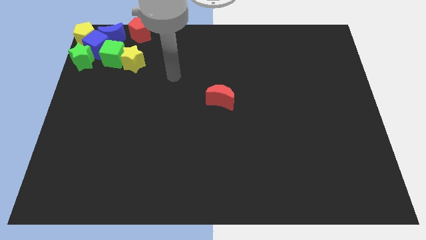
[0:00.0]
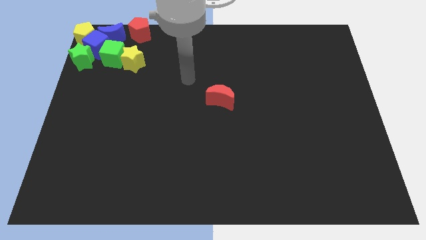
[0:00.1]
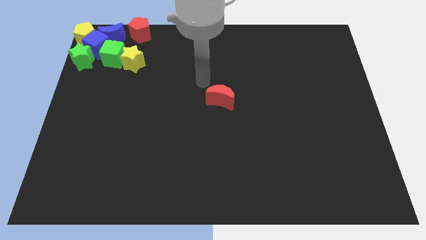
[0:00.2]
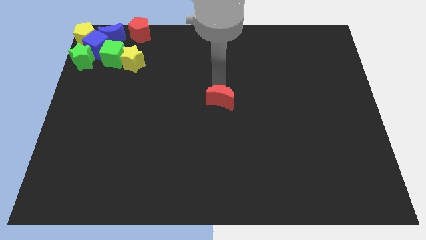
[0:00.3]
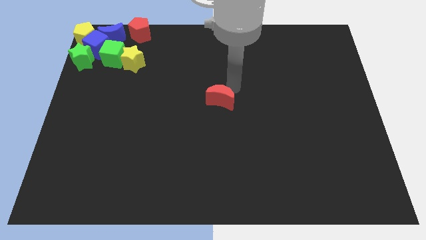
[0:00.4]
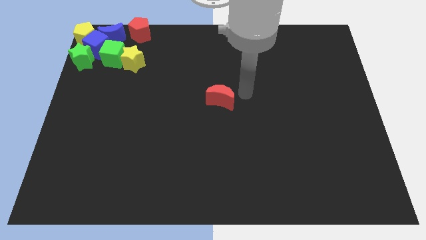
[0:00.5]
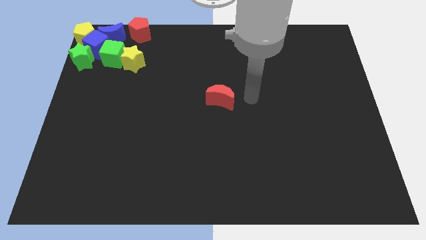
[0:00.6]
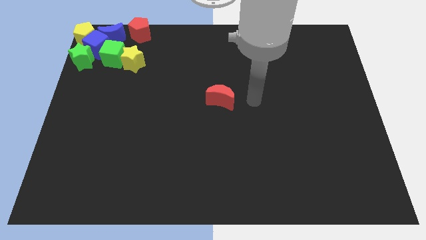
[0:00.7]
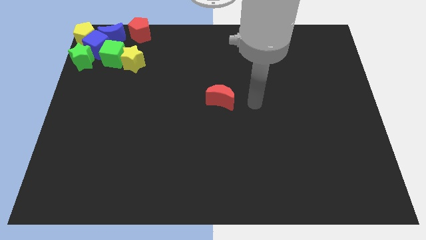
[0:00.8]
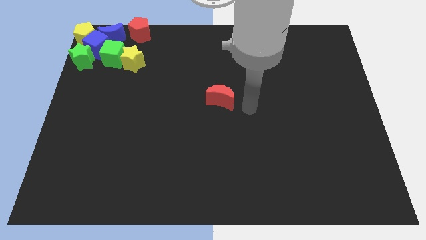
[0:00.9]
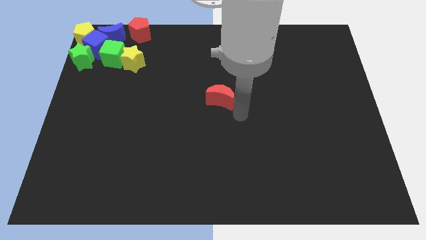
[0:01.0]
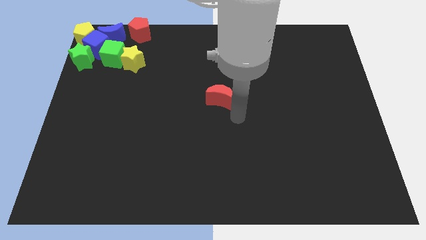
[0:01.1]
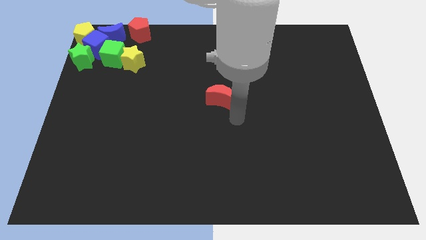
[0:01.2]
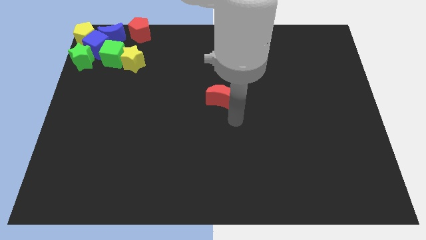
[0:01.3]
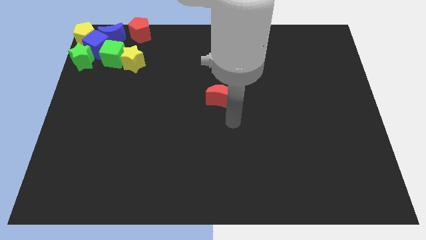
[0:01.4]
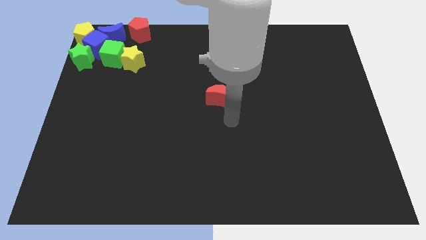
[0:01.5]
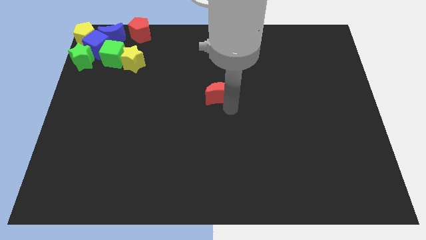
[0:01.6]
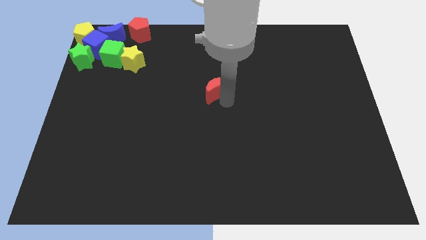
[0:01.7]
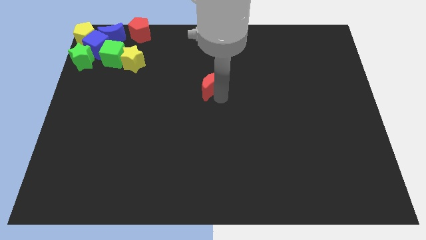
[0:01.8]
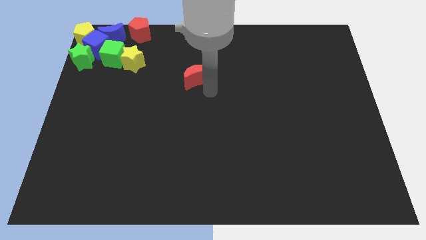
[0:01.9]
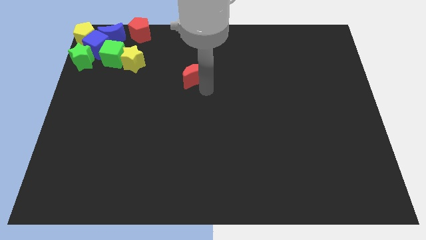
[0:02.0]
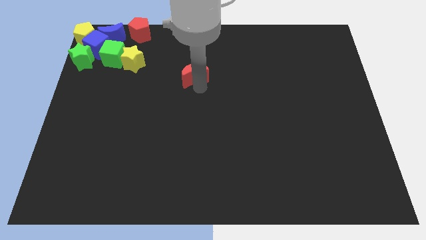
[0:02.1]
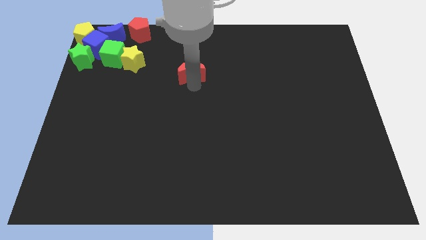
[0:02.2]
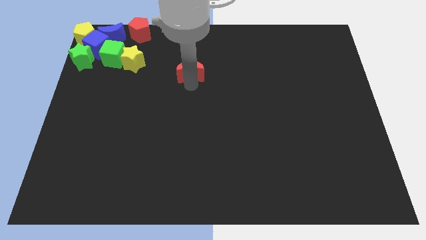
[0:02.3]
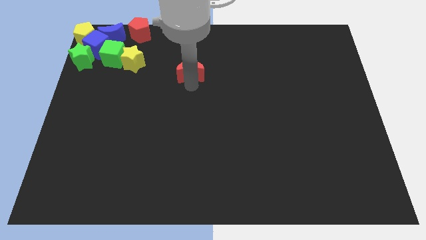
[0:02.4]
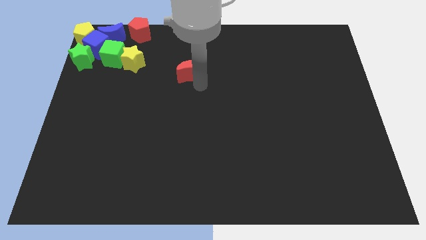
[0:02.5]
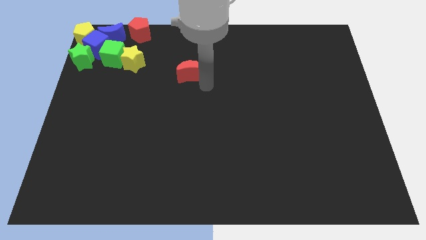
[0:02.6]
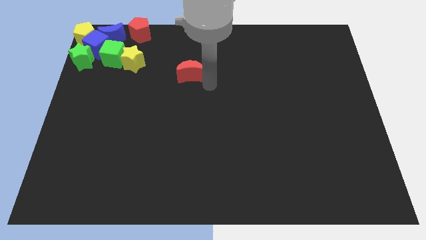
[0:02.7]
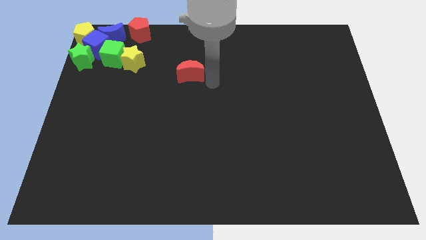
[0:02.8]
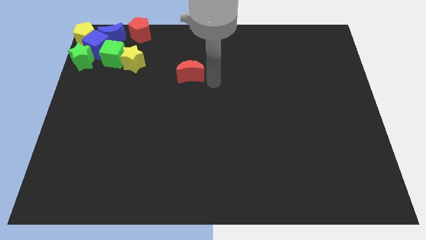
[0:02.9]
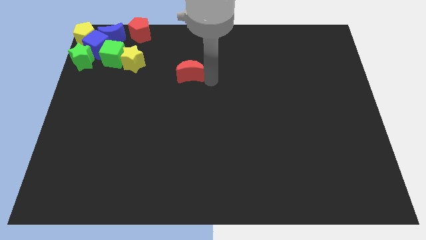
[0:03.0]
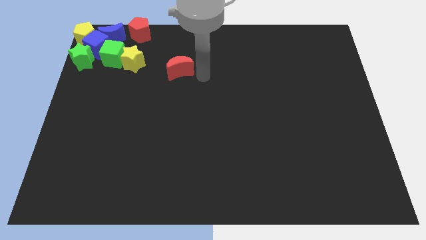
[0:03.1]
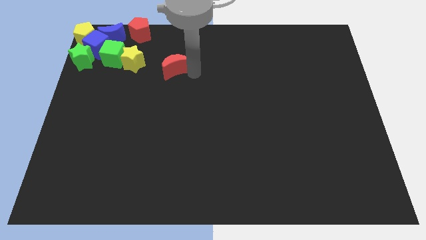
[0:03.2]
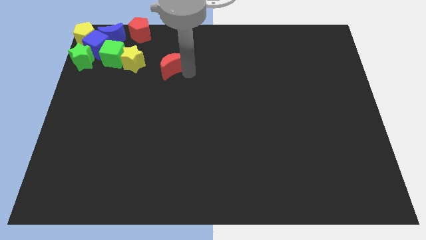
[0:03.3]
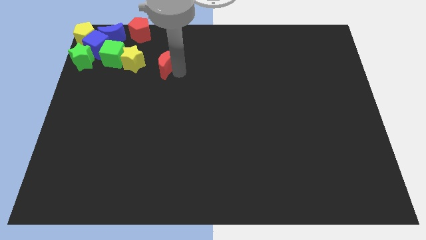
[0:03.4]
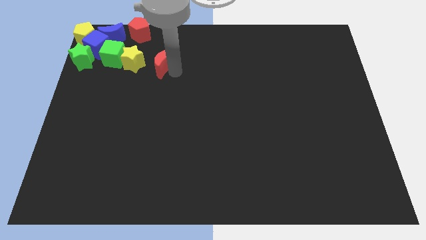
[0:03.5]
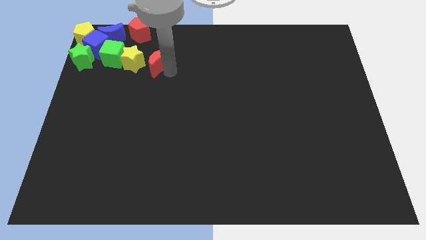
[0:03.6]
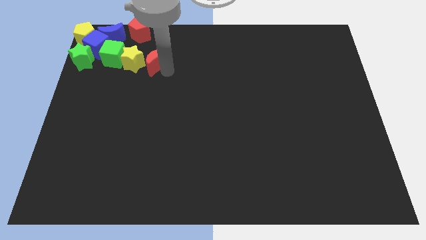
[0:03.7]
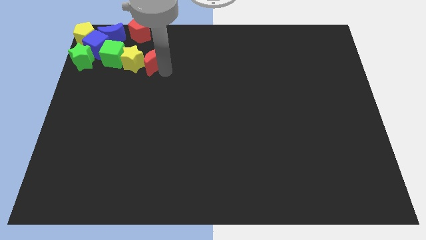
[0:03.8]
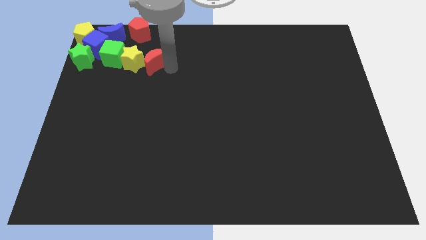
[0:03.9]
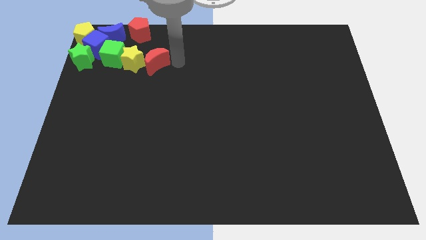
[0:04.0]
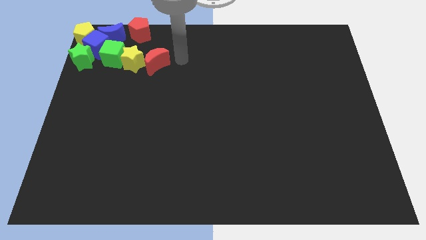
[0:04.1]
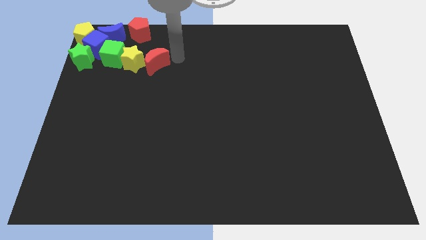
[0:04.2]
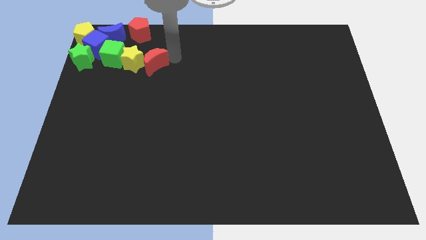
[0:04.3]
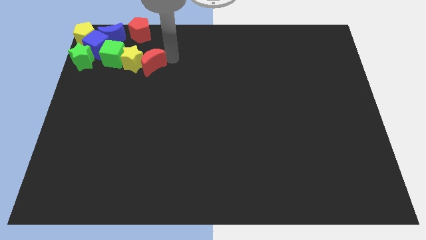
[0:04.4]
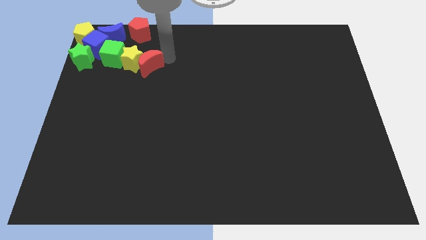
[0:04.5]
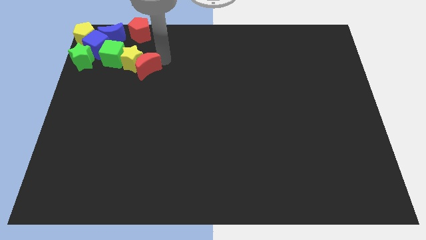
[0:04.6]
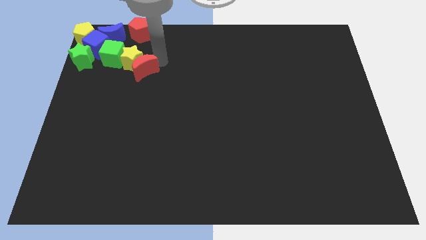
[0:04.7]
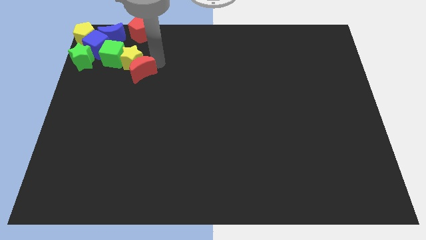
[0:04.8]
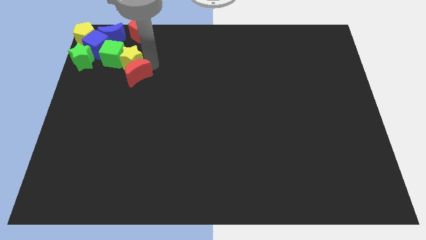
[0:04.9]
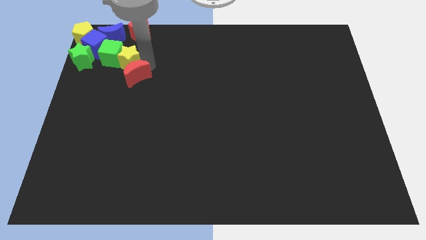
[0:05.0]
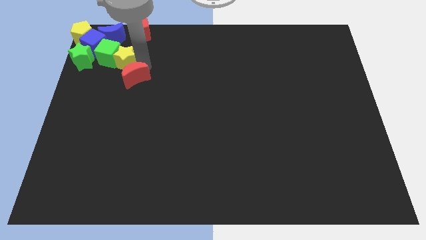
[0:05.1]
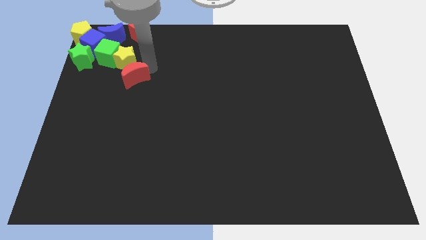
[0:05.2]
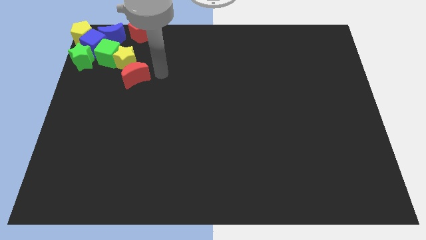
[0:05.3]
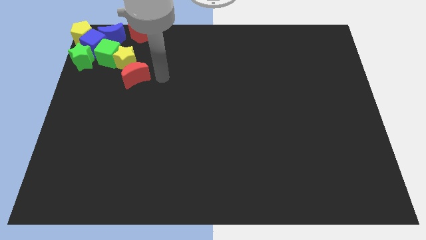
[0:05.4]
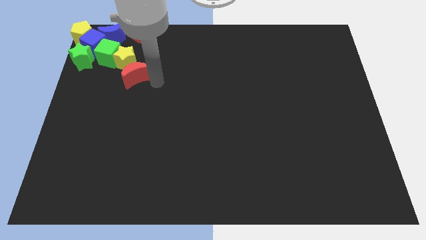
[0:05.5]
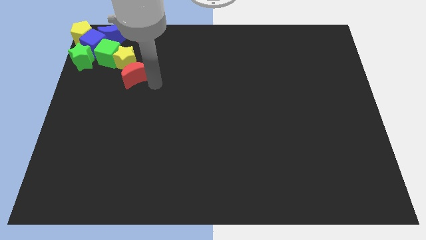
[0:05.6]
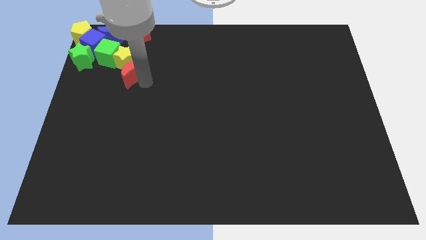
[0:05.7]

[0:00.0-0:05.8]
push the red moon into the group of blocks

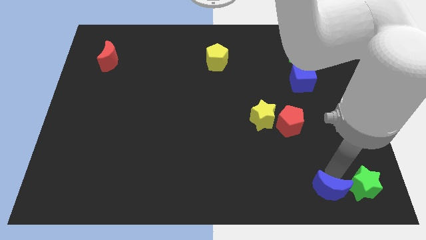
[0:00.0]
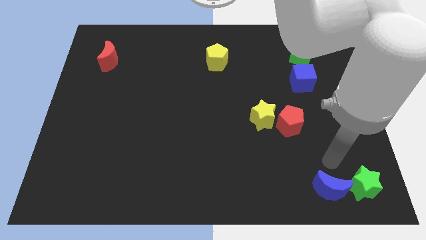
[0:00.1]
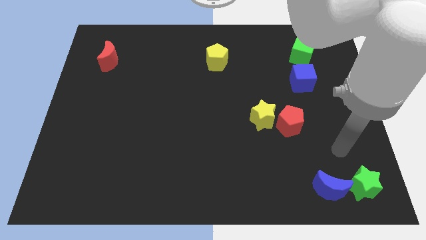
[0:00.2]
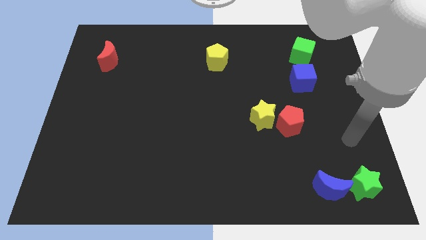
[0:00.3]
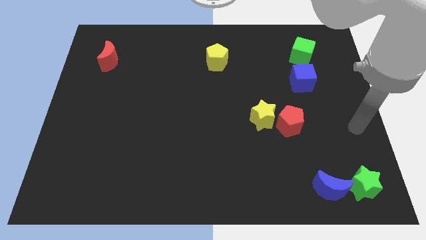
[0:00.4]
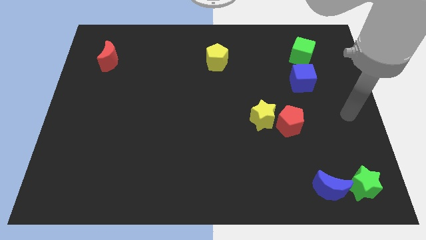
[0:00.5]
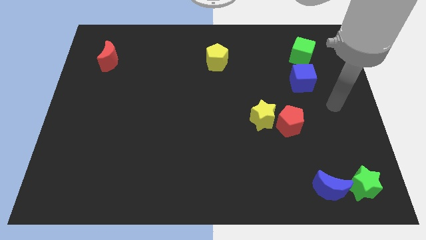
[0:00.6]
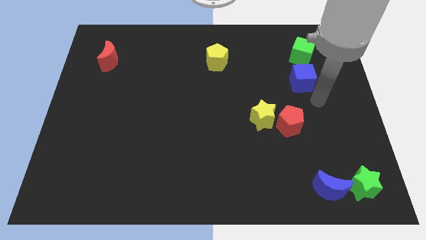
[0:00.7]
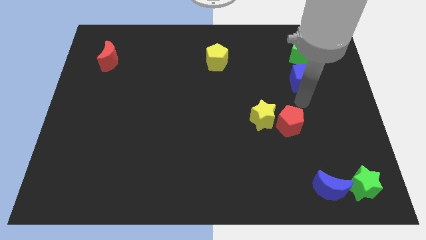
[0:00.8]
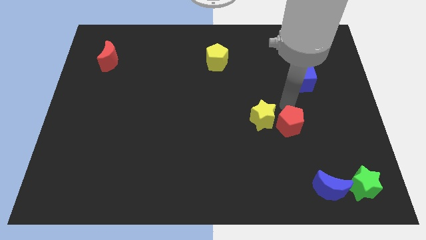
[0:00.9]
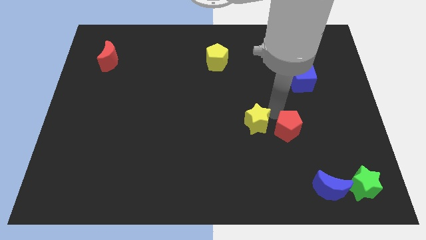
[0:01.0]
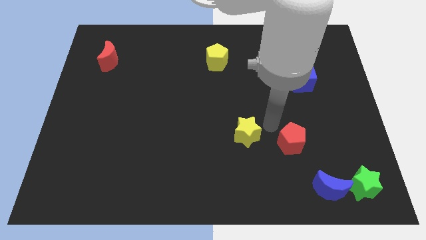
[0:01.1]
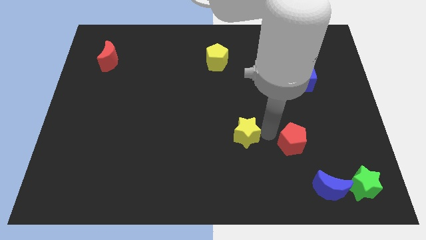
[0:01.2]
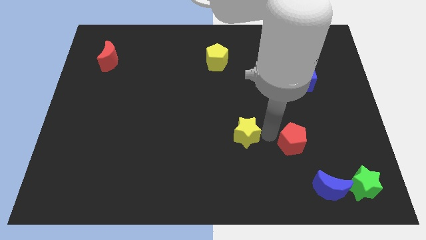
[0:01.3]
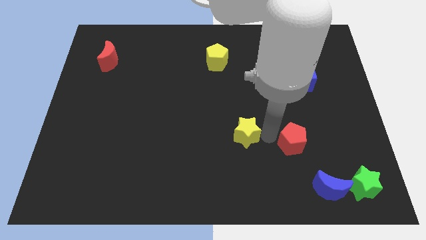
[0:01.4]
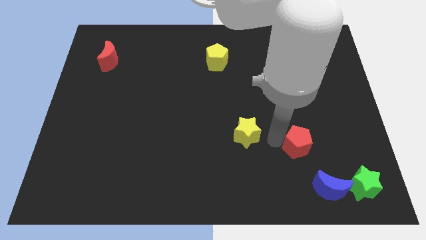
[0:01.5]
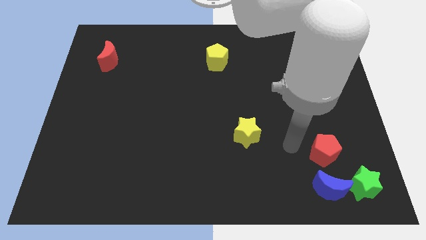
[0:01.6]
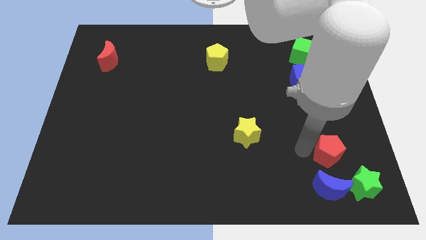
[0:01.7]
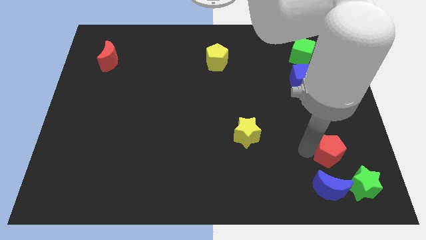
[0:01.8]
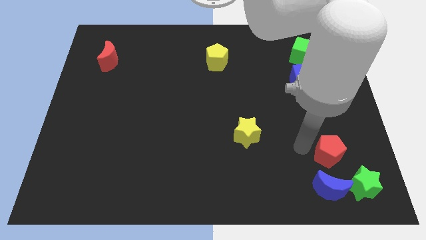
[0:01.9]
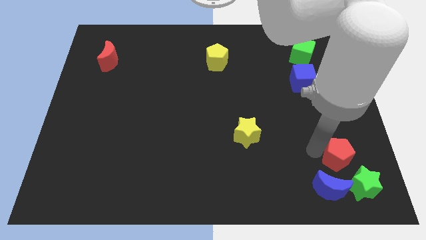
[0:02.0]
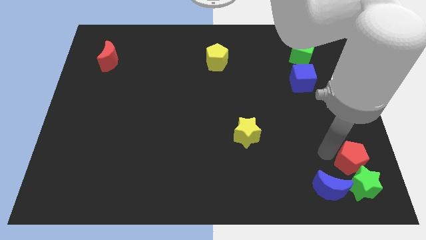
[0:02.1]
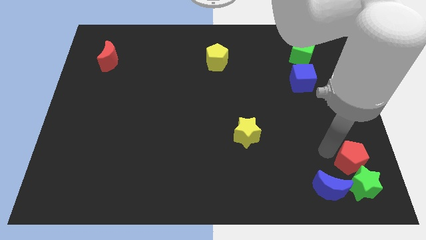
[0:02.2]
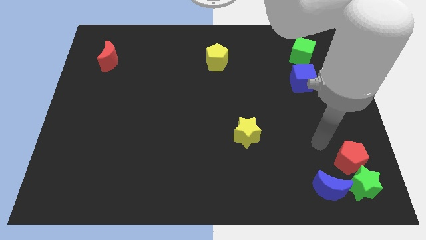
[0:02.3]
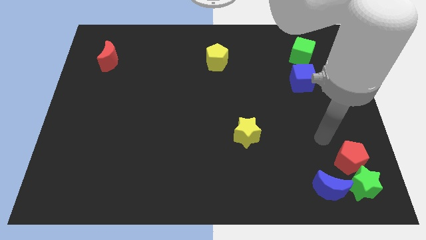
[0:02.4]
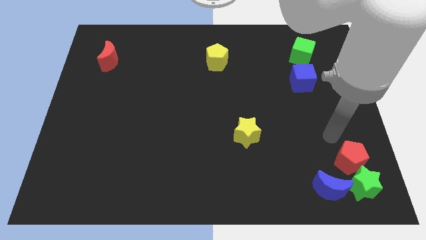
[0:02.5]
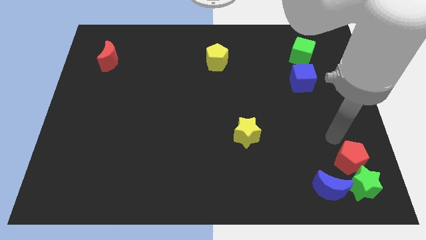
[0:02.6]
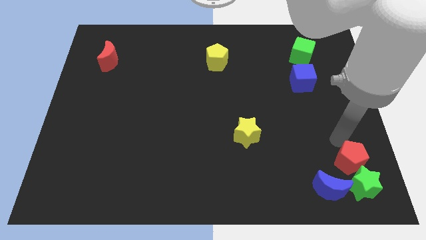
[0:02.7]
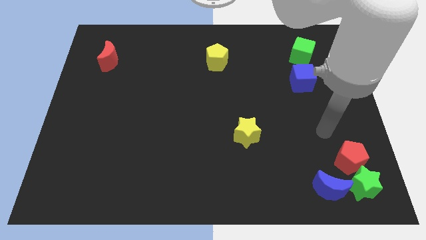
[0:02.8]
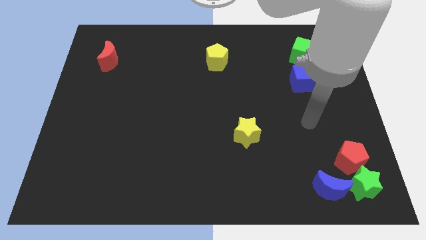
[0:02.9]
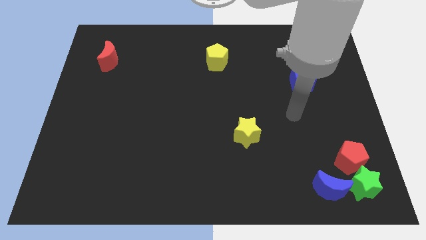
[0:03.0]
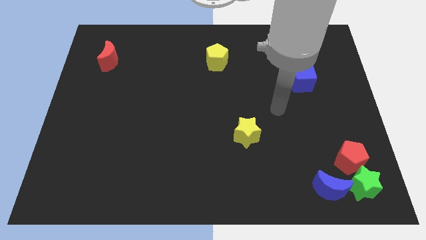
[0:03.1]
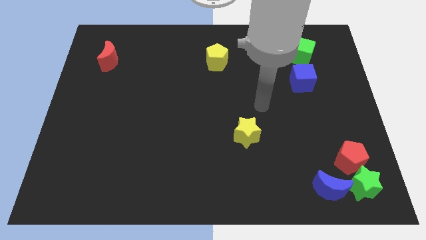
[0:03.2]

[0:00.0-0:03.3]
place the red pentagon towards the top left of the green star
